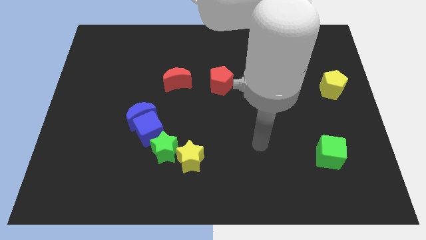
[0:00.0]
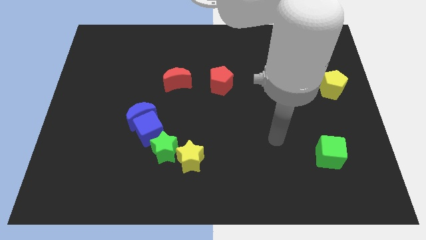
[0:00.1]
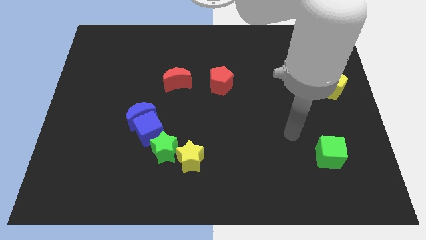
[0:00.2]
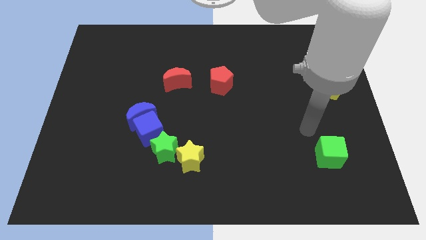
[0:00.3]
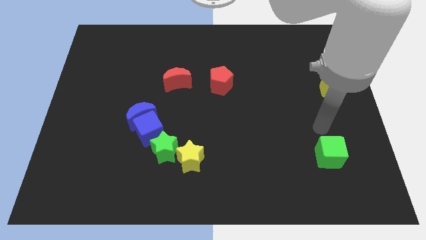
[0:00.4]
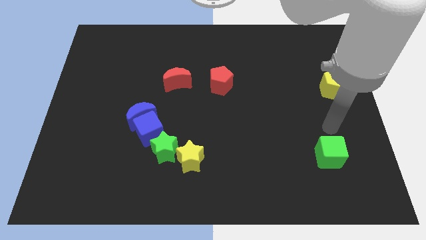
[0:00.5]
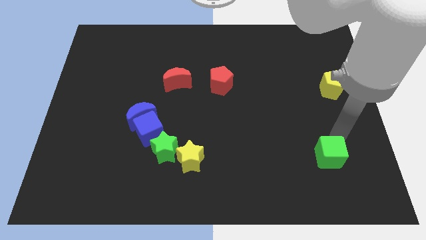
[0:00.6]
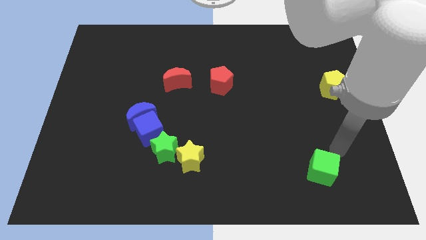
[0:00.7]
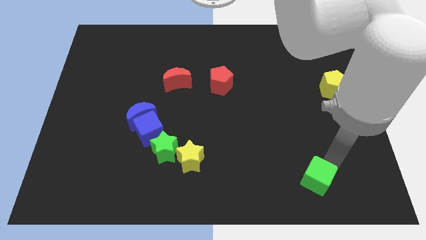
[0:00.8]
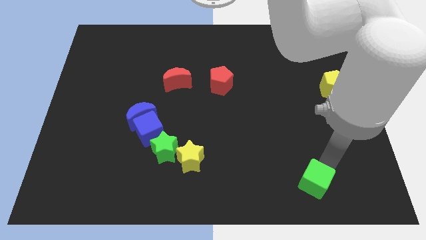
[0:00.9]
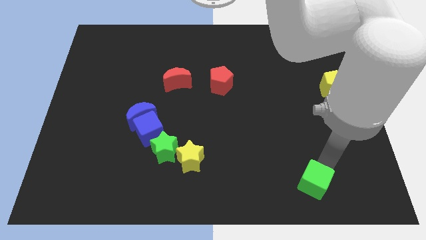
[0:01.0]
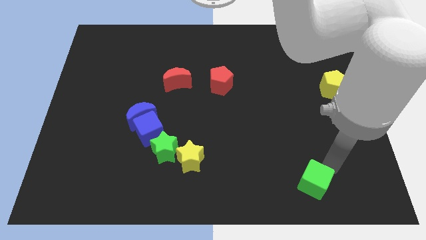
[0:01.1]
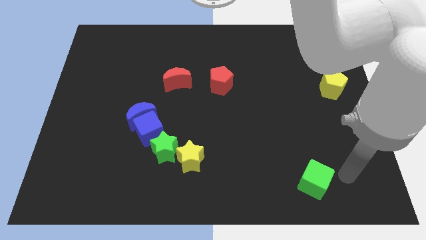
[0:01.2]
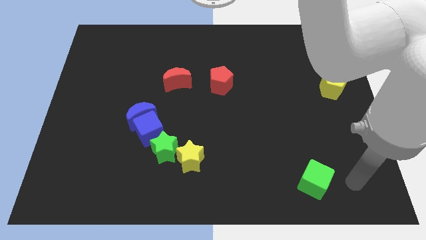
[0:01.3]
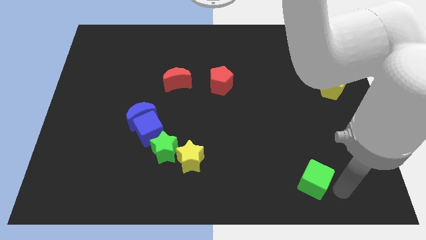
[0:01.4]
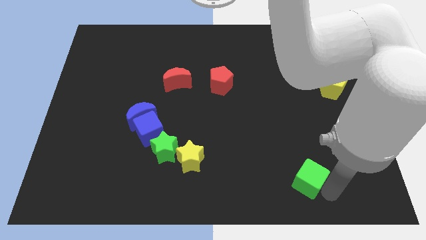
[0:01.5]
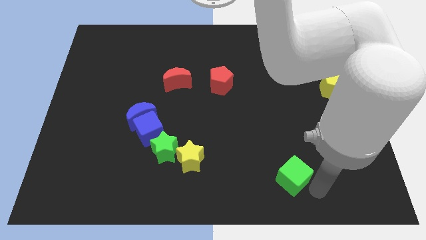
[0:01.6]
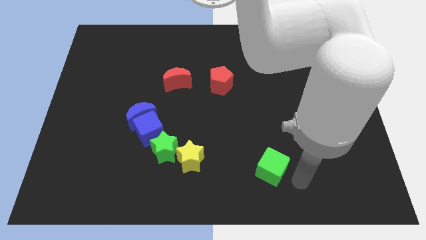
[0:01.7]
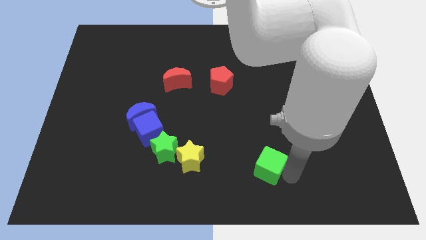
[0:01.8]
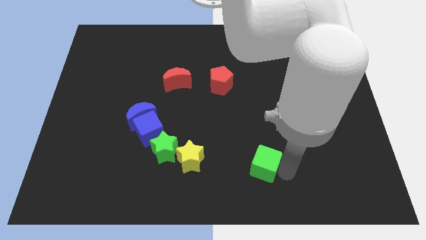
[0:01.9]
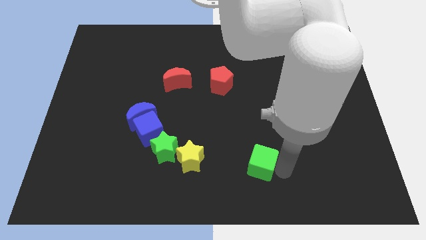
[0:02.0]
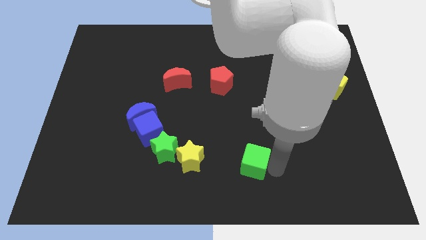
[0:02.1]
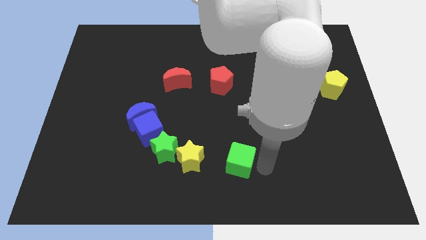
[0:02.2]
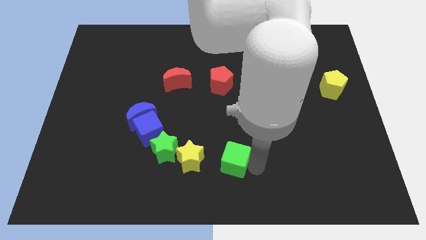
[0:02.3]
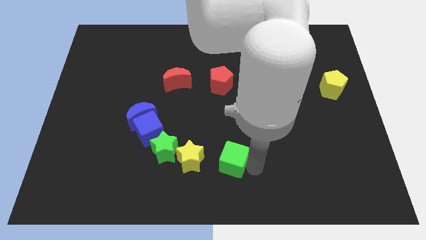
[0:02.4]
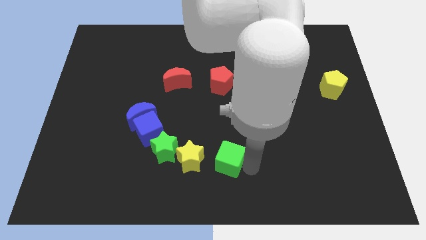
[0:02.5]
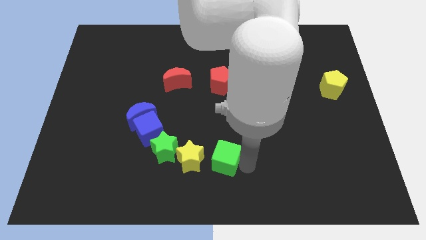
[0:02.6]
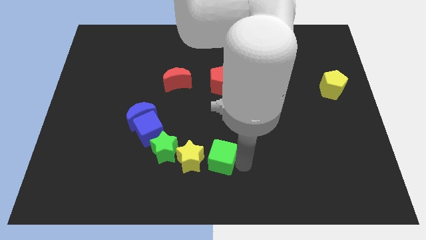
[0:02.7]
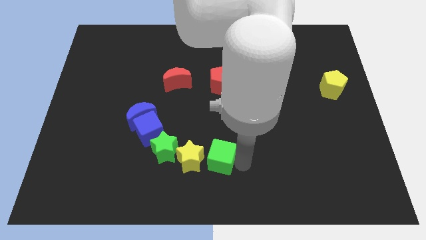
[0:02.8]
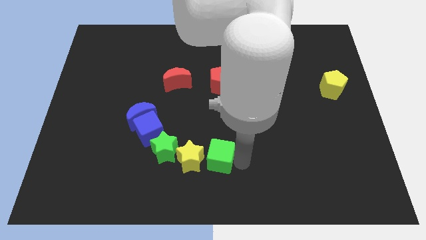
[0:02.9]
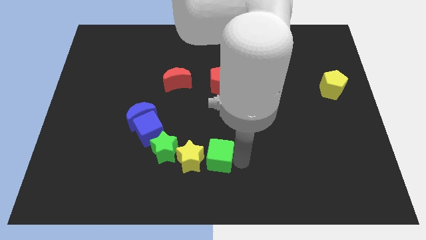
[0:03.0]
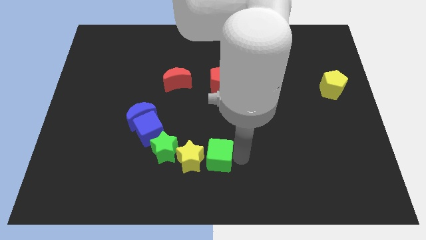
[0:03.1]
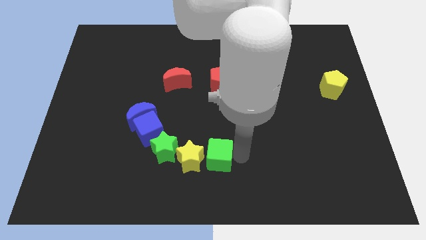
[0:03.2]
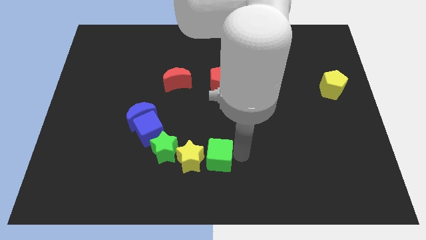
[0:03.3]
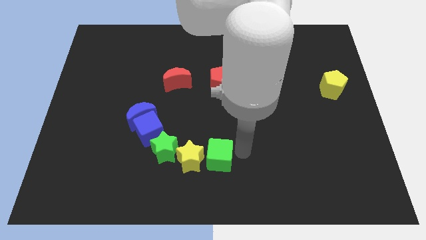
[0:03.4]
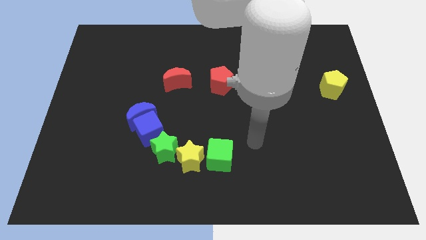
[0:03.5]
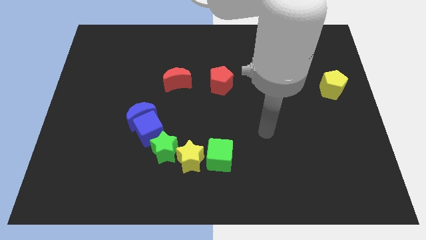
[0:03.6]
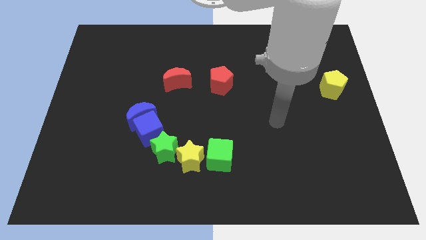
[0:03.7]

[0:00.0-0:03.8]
place the green cube to the right side of the yellow star

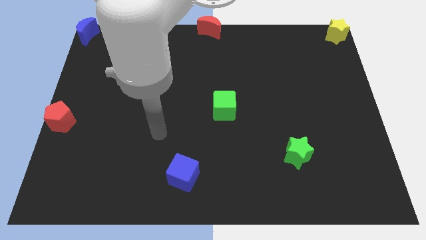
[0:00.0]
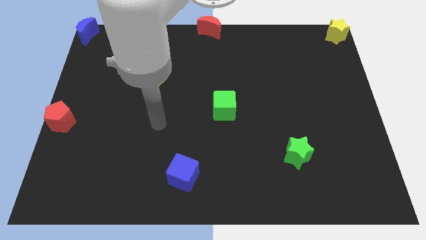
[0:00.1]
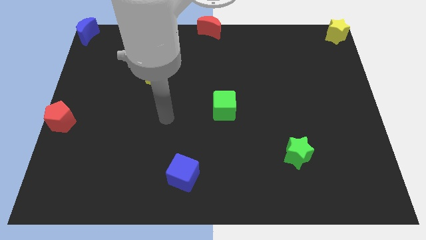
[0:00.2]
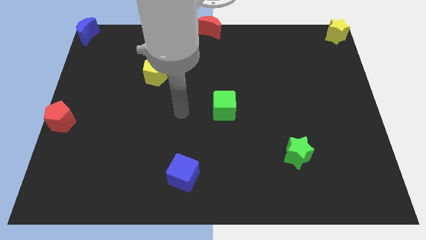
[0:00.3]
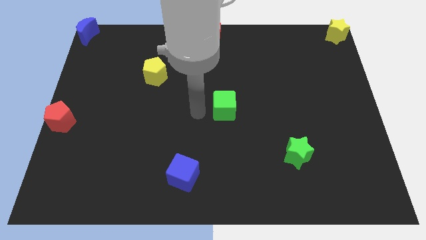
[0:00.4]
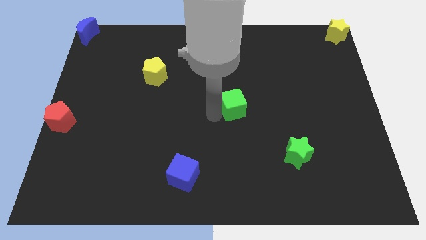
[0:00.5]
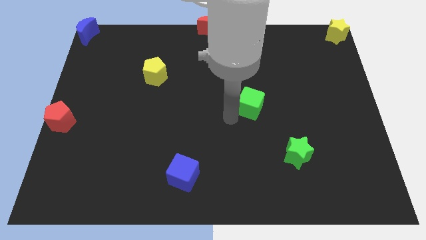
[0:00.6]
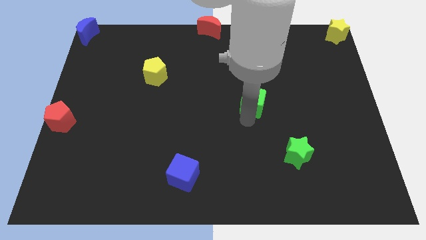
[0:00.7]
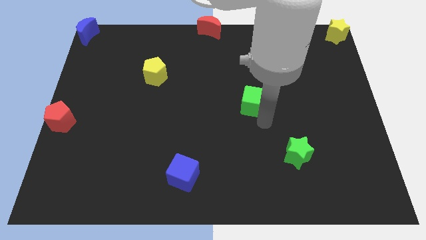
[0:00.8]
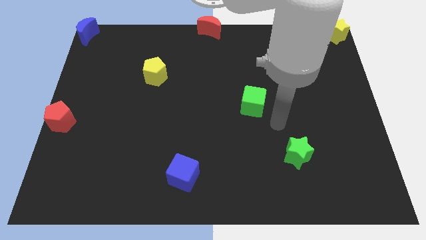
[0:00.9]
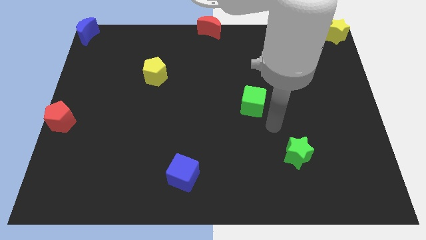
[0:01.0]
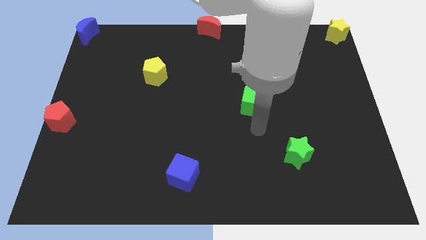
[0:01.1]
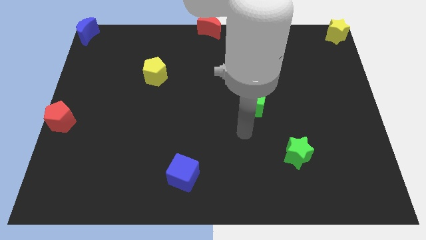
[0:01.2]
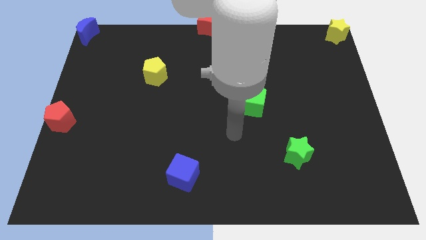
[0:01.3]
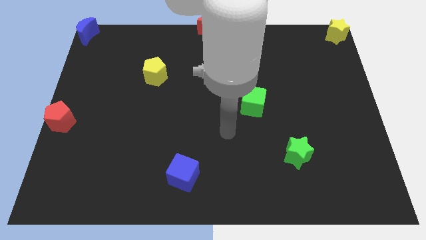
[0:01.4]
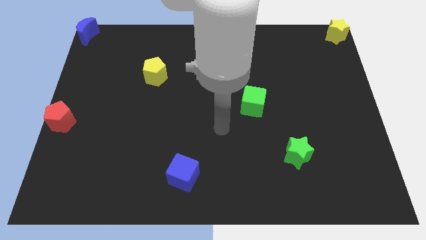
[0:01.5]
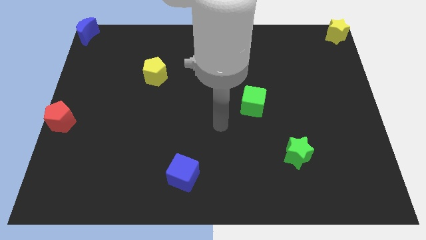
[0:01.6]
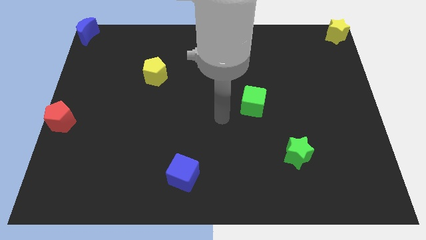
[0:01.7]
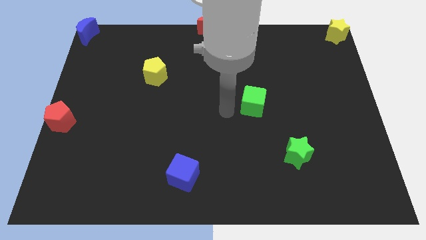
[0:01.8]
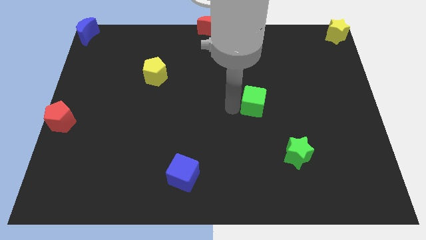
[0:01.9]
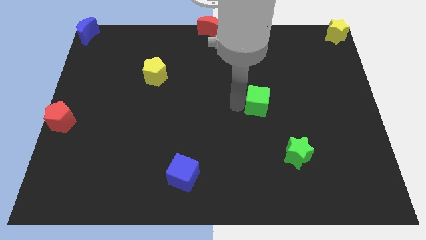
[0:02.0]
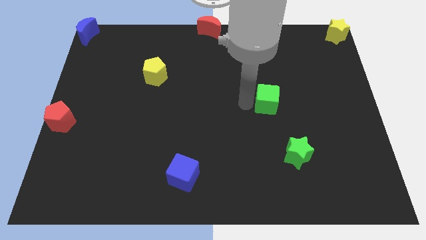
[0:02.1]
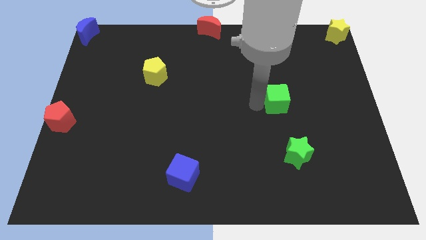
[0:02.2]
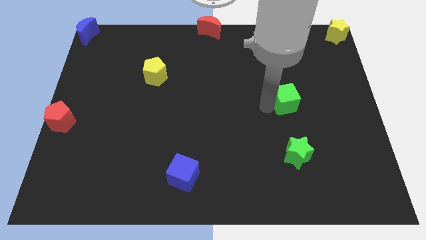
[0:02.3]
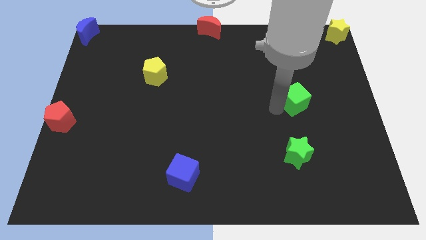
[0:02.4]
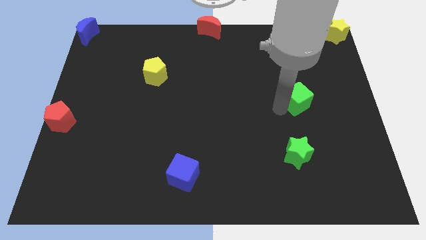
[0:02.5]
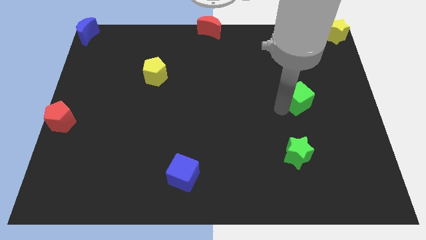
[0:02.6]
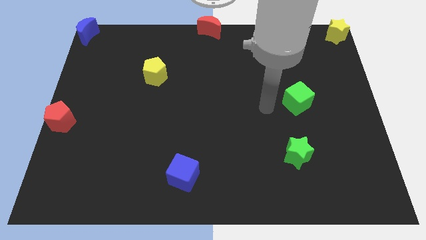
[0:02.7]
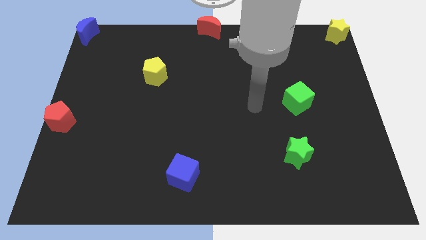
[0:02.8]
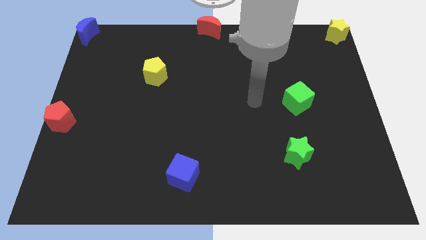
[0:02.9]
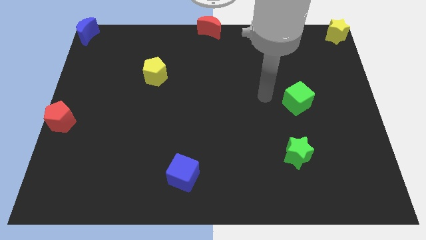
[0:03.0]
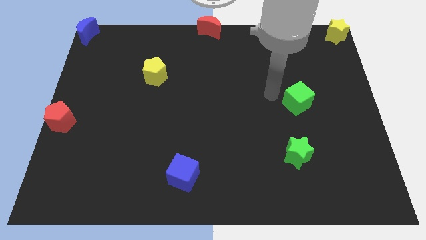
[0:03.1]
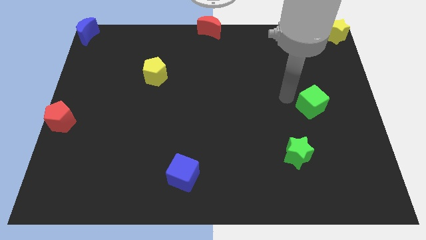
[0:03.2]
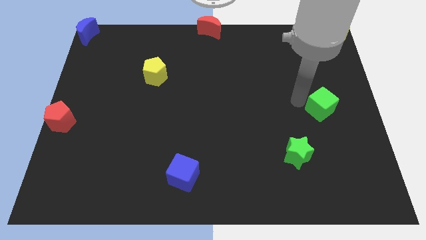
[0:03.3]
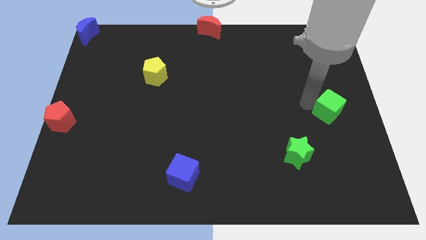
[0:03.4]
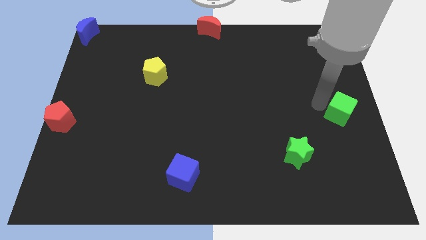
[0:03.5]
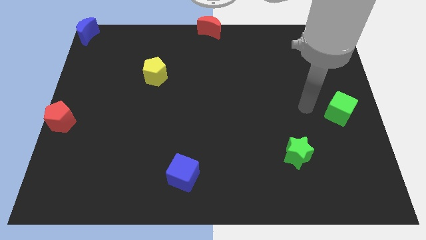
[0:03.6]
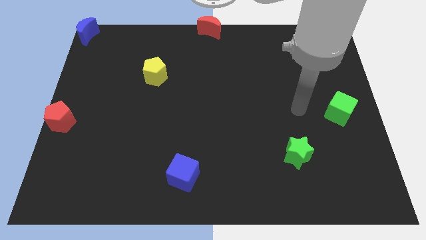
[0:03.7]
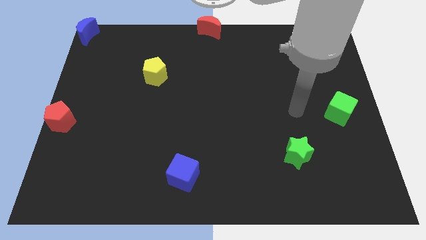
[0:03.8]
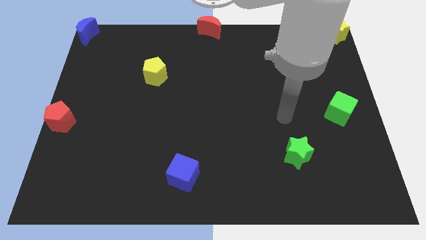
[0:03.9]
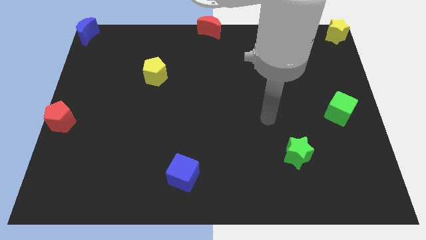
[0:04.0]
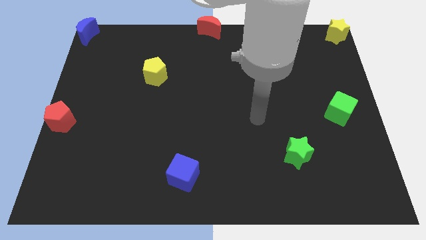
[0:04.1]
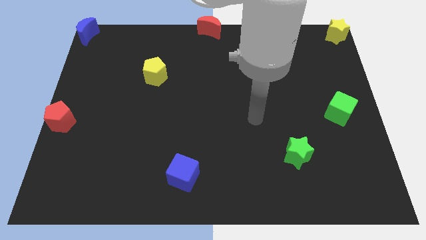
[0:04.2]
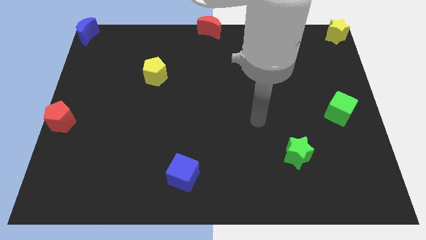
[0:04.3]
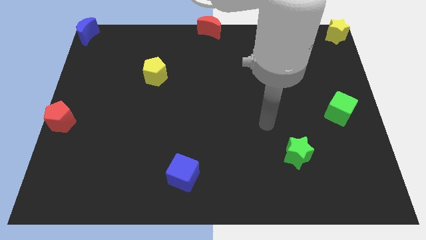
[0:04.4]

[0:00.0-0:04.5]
put the green cube at the center right corner

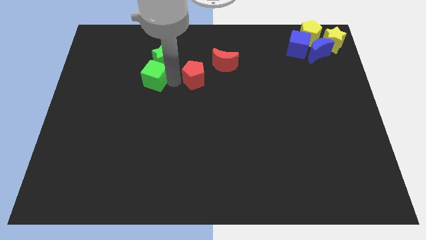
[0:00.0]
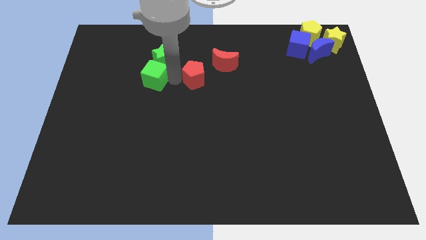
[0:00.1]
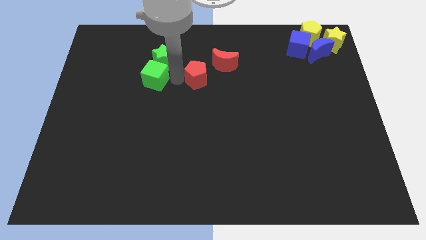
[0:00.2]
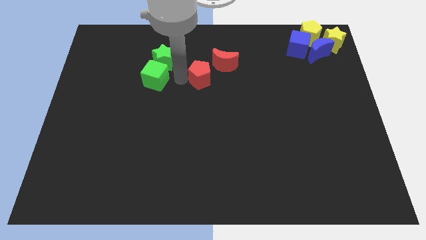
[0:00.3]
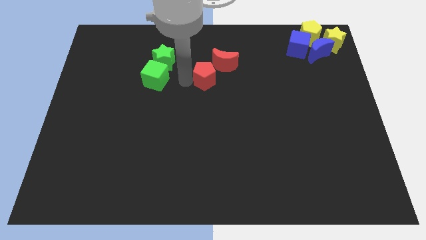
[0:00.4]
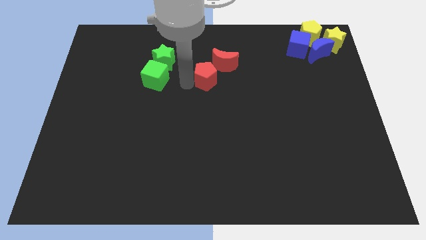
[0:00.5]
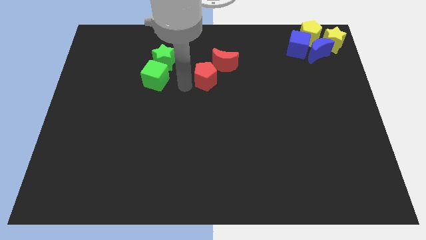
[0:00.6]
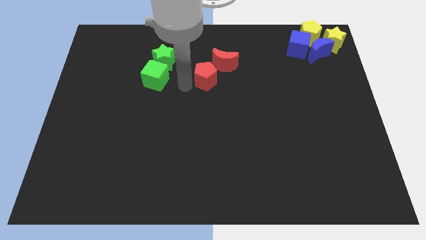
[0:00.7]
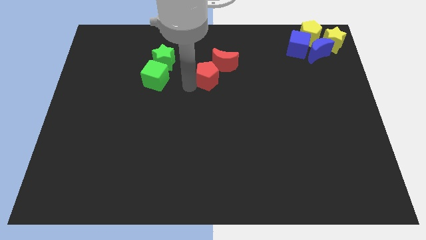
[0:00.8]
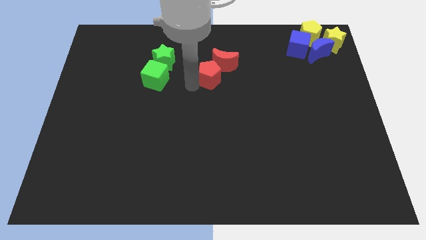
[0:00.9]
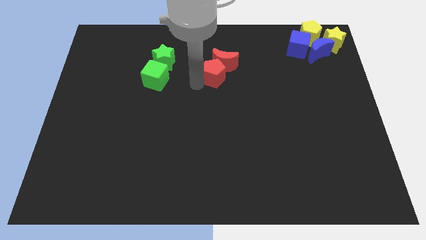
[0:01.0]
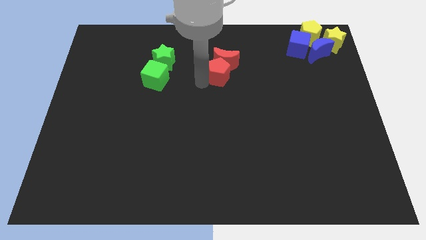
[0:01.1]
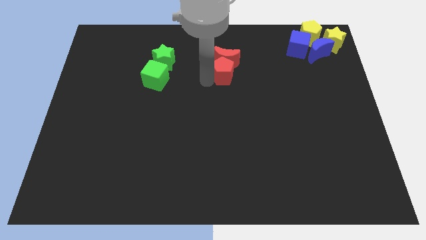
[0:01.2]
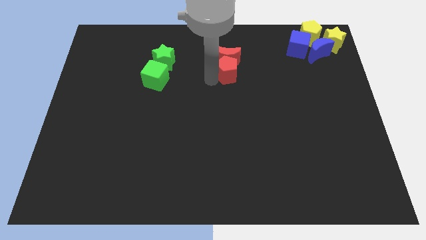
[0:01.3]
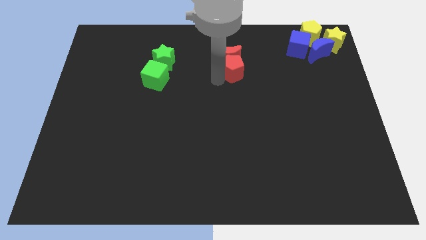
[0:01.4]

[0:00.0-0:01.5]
put red blocks together in a vertical line
